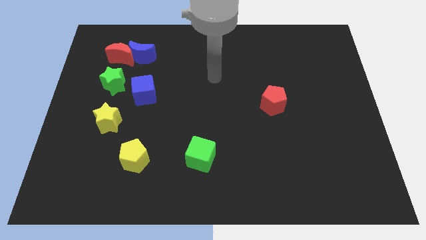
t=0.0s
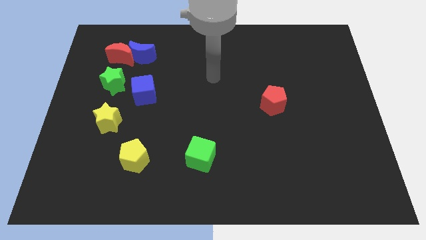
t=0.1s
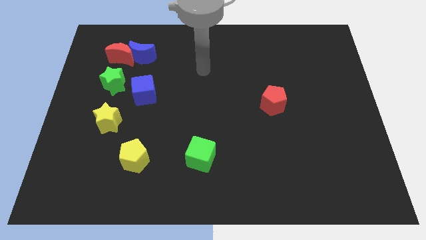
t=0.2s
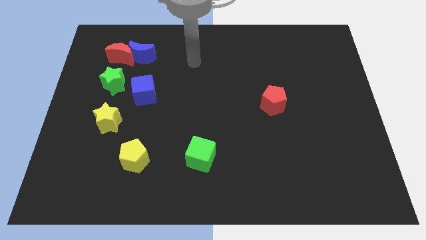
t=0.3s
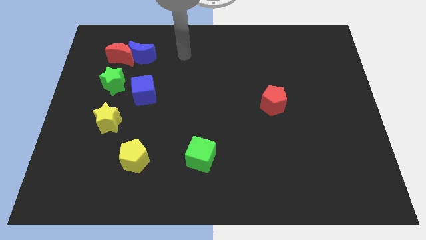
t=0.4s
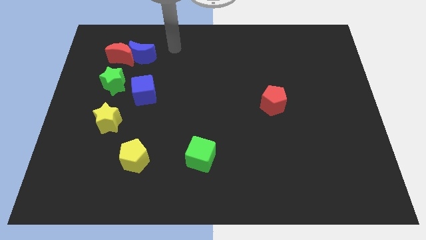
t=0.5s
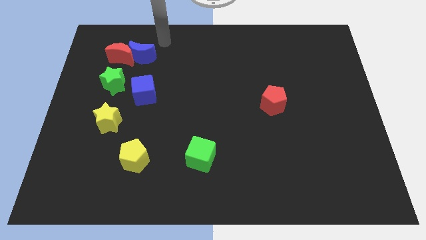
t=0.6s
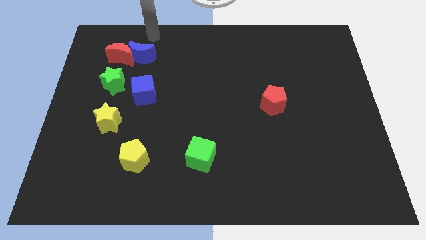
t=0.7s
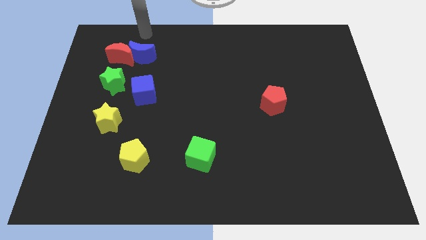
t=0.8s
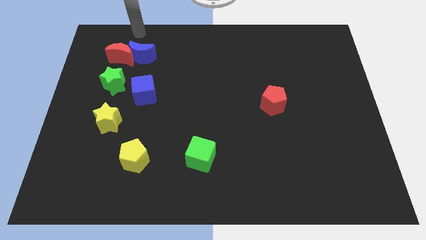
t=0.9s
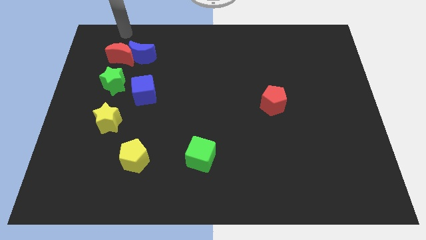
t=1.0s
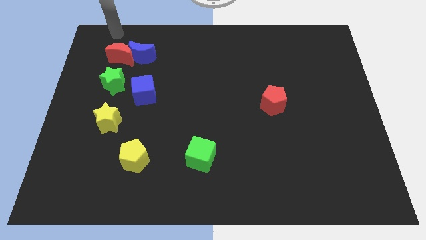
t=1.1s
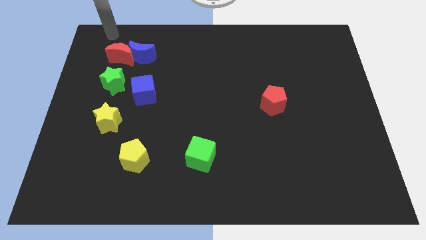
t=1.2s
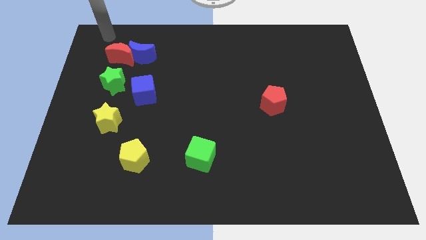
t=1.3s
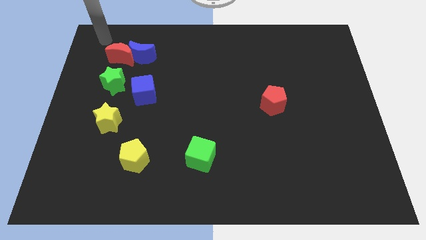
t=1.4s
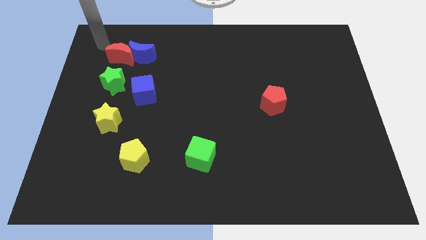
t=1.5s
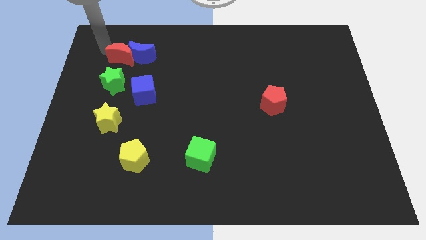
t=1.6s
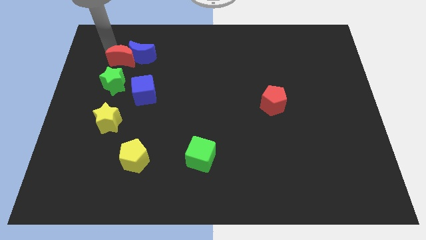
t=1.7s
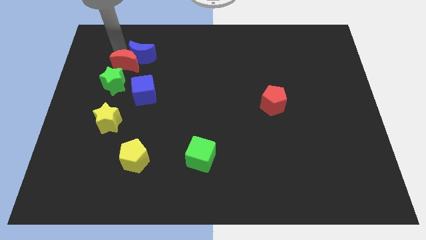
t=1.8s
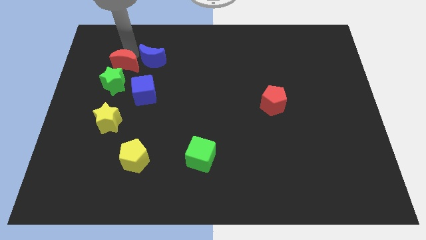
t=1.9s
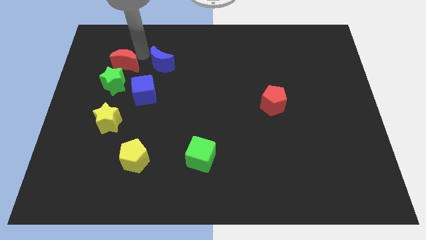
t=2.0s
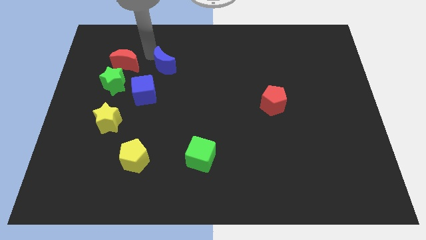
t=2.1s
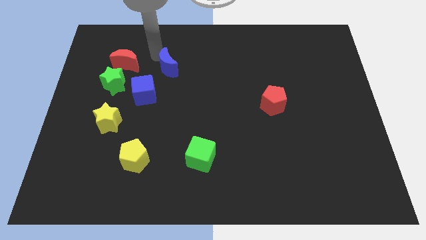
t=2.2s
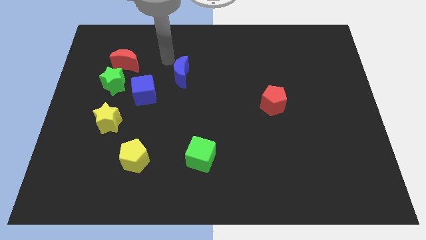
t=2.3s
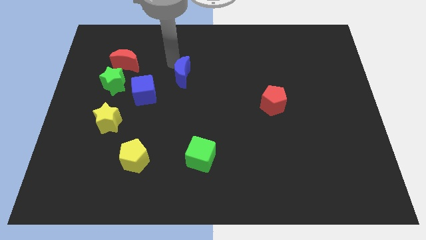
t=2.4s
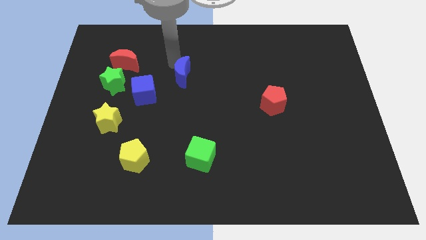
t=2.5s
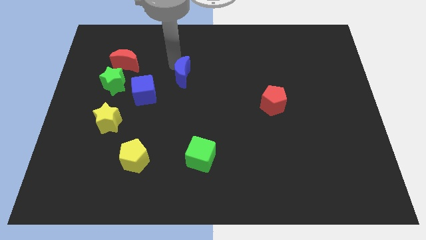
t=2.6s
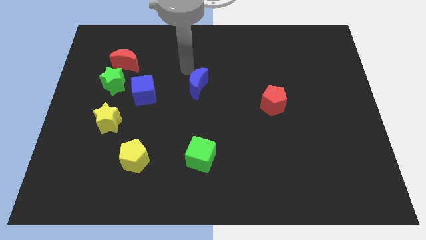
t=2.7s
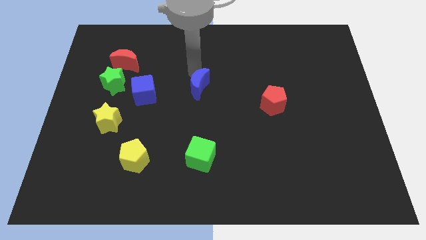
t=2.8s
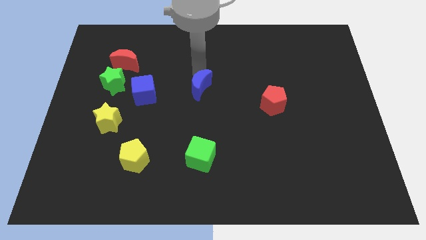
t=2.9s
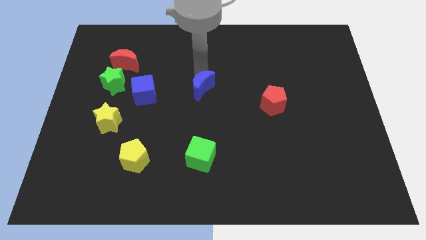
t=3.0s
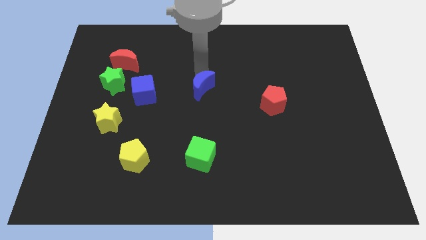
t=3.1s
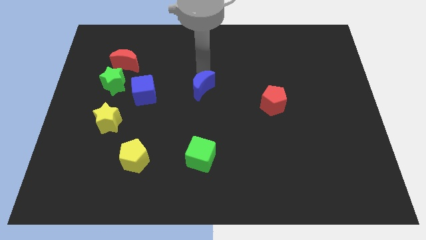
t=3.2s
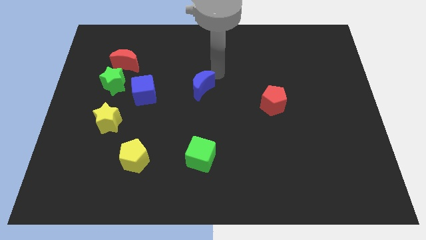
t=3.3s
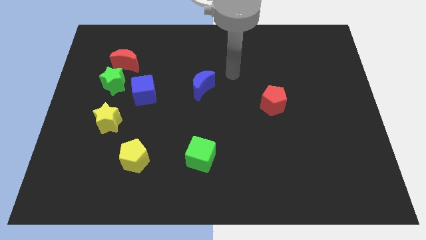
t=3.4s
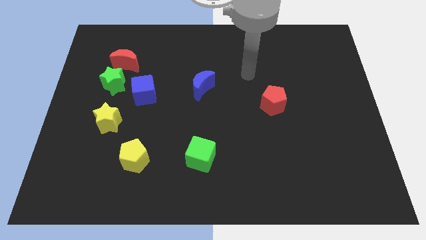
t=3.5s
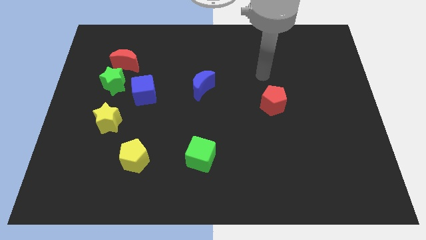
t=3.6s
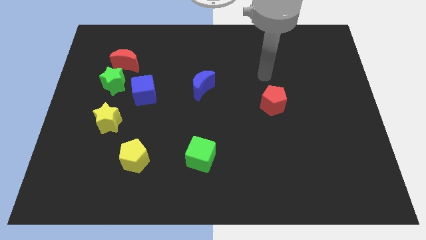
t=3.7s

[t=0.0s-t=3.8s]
move the blue crescent away from the red crescent

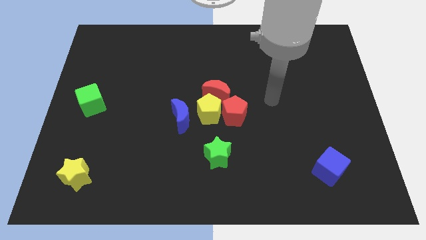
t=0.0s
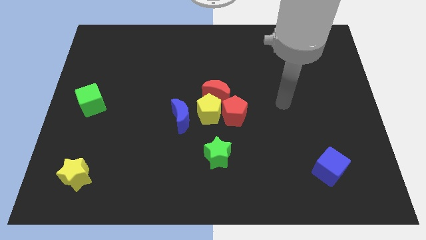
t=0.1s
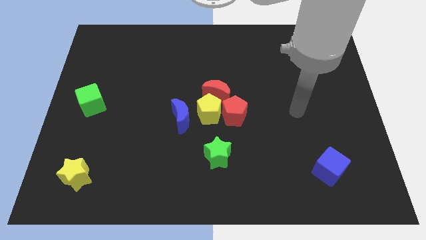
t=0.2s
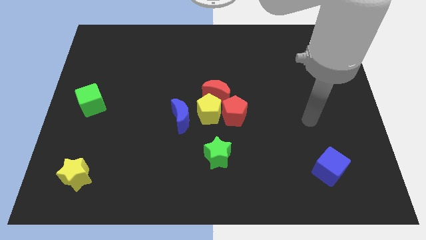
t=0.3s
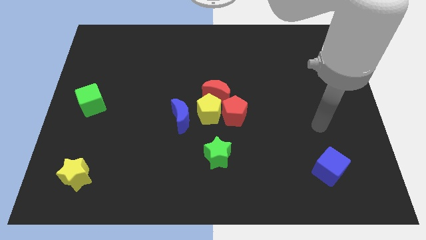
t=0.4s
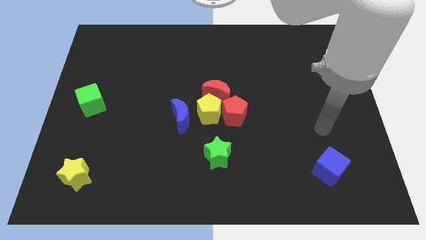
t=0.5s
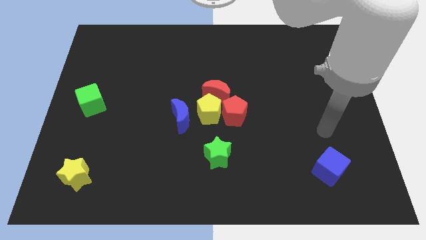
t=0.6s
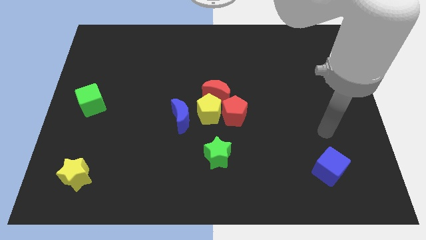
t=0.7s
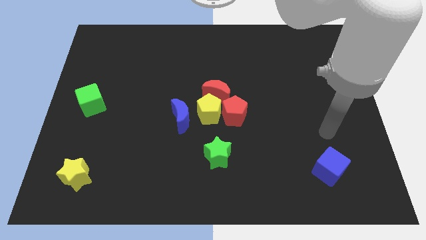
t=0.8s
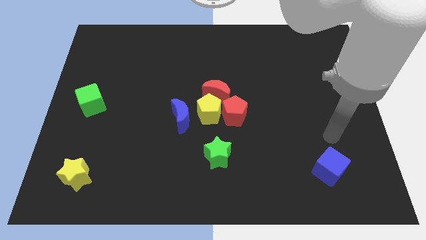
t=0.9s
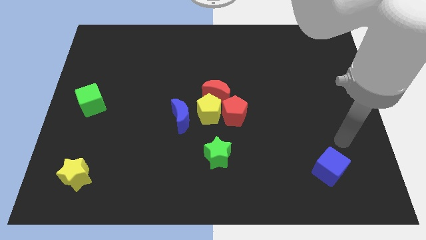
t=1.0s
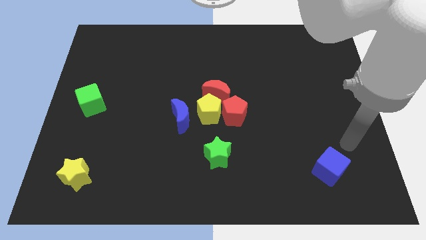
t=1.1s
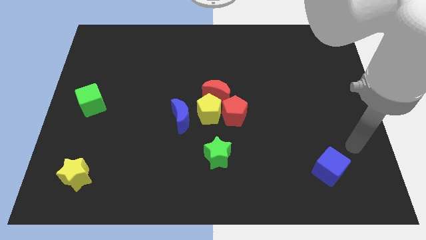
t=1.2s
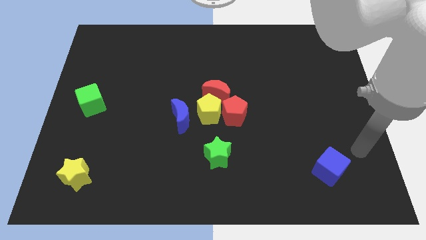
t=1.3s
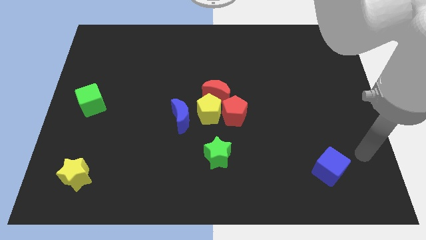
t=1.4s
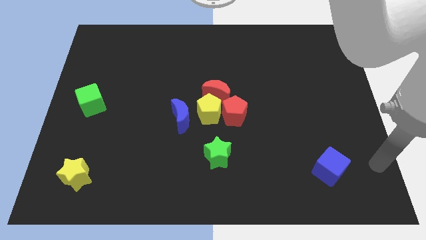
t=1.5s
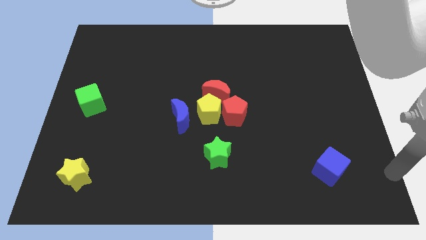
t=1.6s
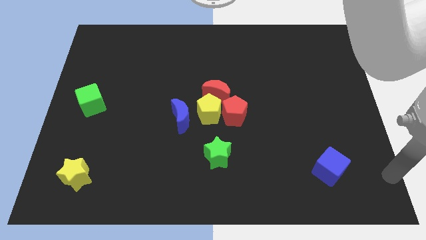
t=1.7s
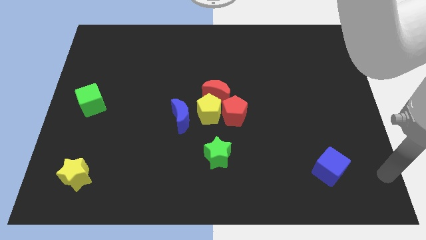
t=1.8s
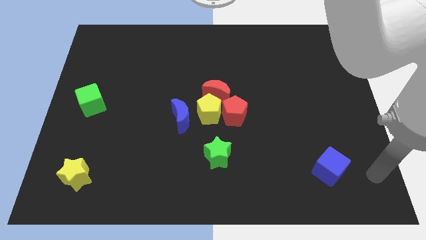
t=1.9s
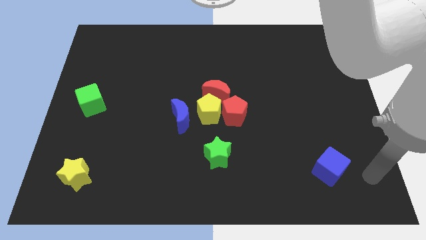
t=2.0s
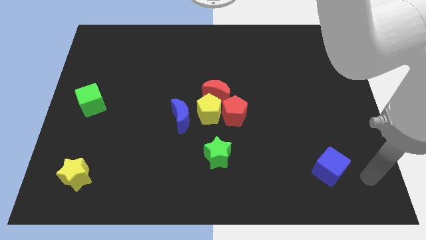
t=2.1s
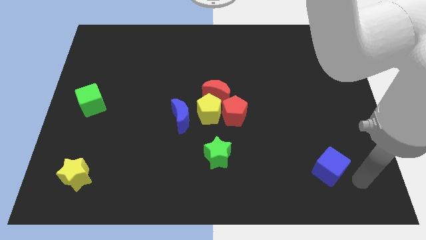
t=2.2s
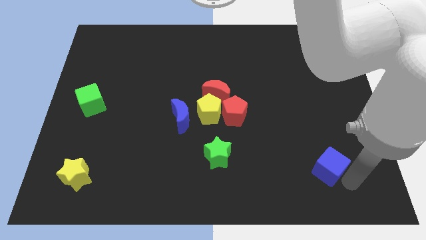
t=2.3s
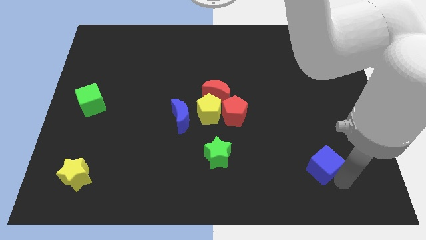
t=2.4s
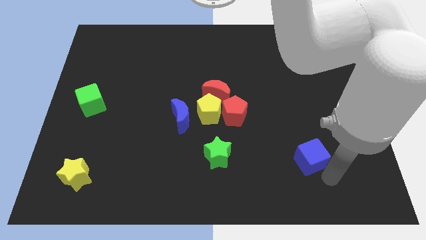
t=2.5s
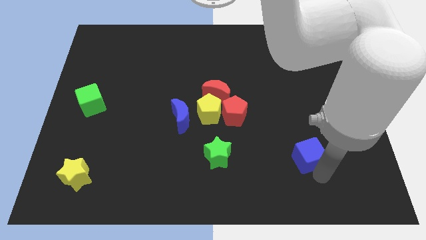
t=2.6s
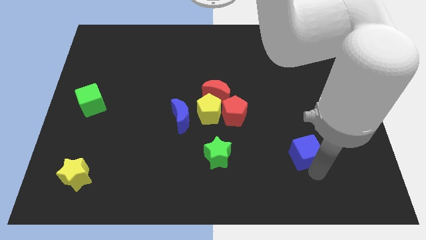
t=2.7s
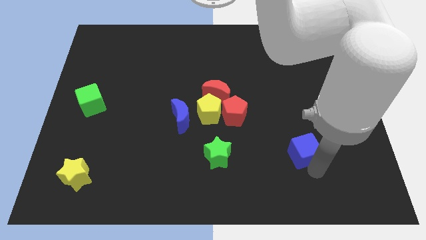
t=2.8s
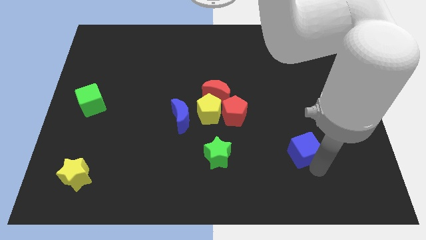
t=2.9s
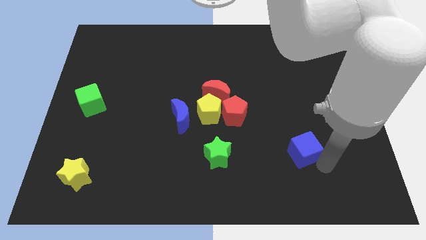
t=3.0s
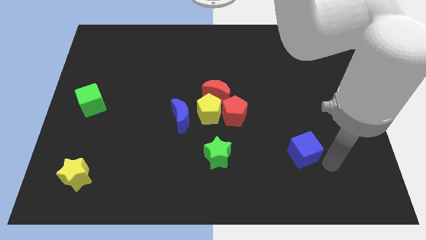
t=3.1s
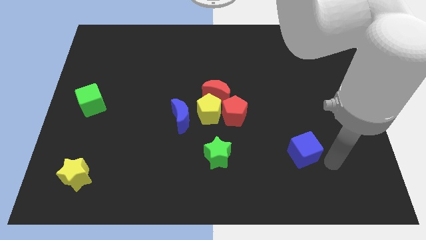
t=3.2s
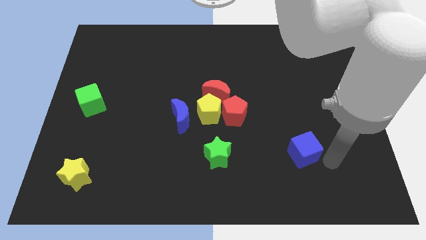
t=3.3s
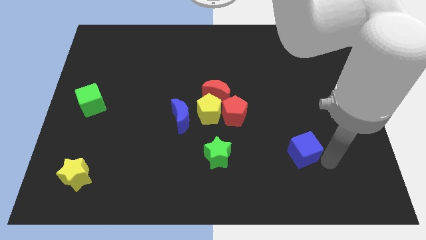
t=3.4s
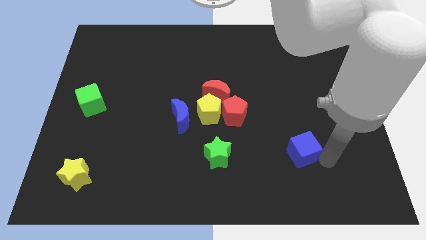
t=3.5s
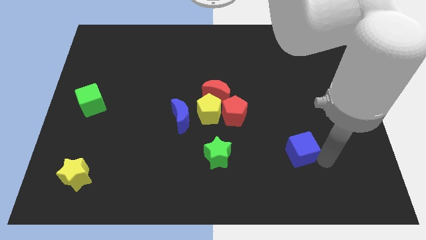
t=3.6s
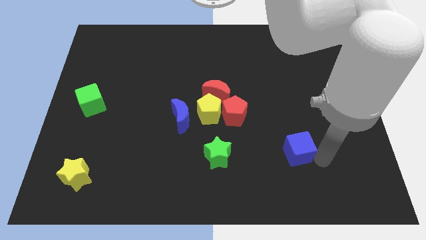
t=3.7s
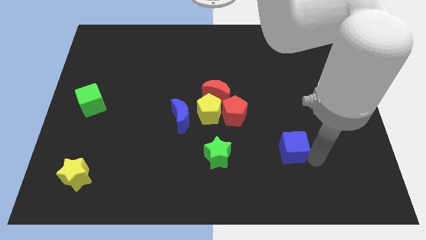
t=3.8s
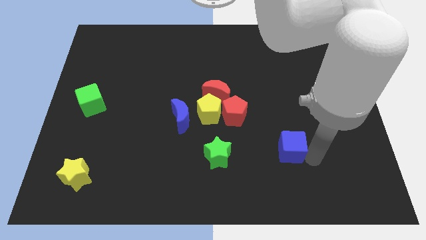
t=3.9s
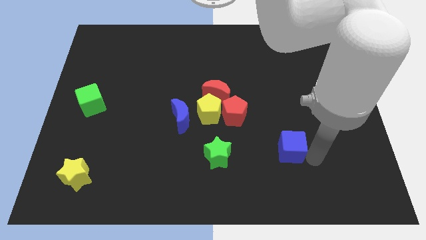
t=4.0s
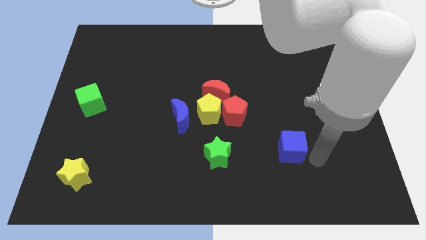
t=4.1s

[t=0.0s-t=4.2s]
put the blue cube to the right side of the green star

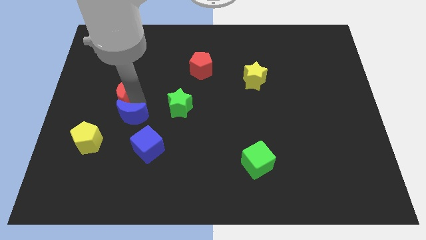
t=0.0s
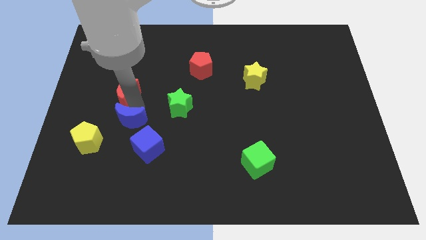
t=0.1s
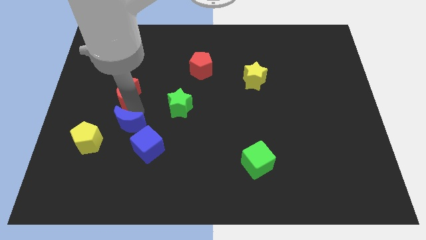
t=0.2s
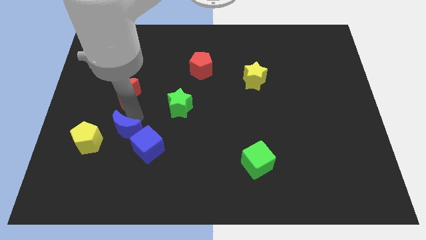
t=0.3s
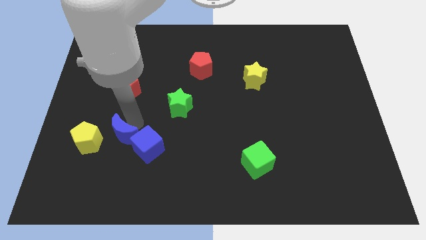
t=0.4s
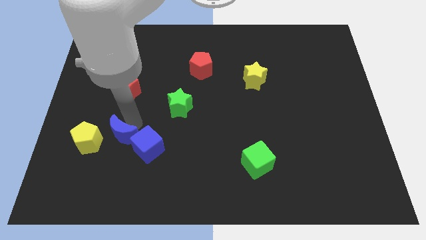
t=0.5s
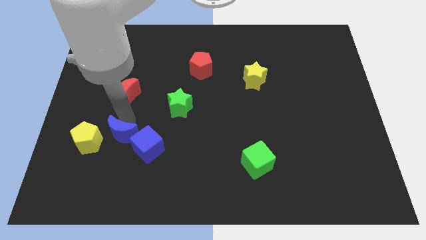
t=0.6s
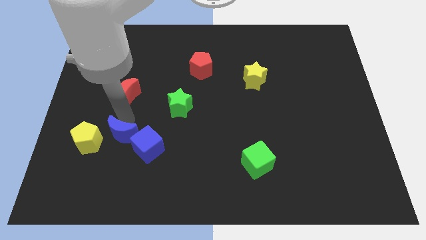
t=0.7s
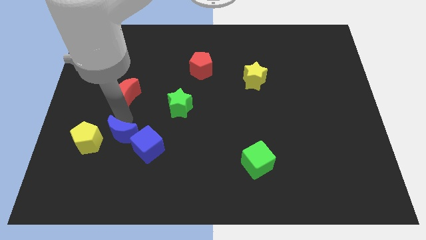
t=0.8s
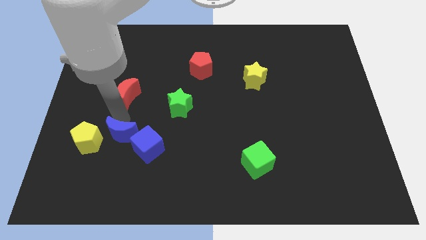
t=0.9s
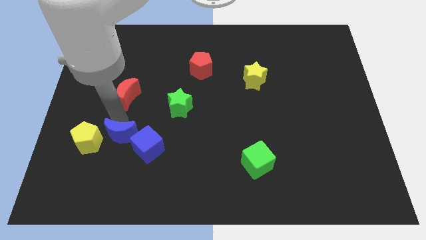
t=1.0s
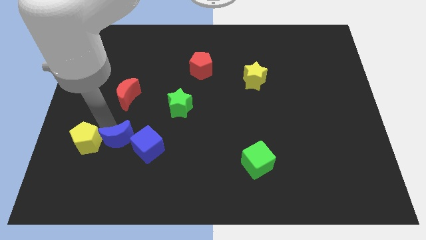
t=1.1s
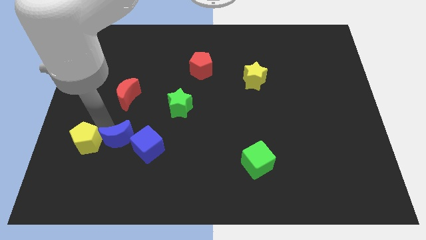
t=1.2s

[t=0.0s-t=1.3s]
push the blue crescent to the right of the yellow pentagon
